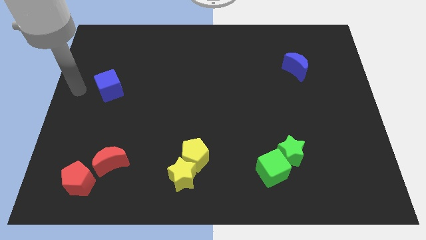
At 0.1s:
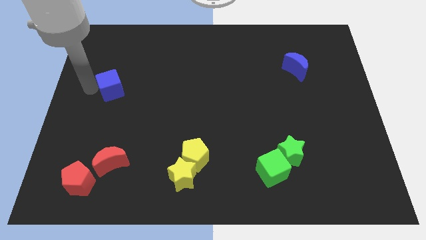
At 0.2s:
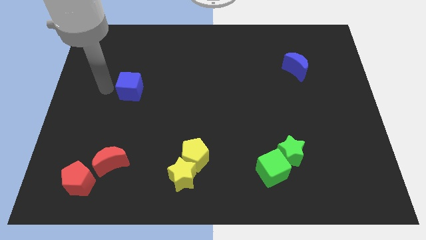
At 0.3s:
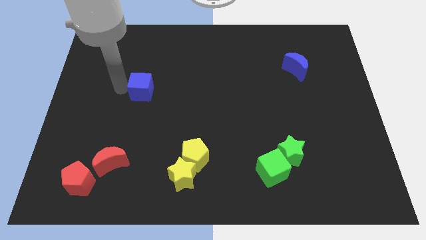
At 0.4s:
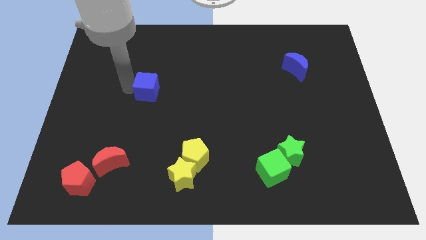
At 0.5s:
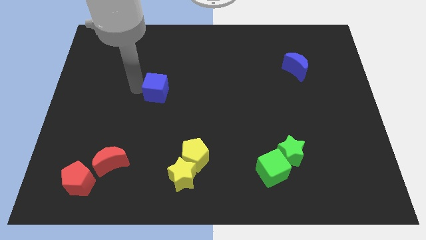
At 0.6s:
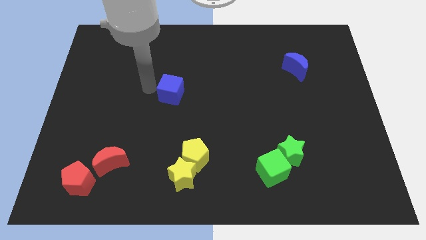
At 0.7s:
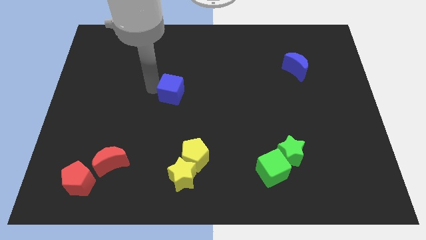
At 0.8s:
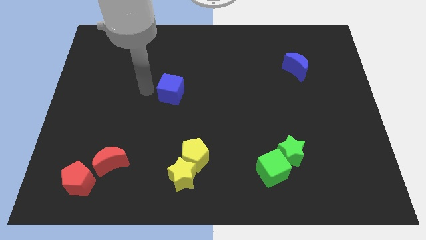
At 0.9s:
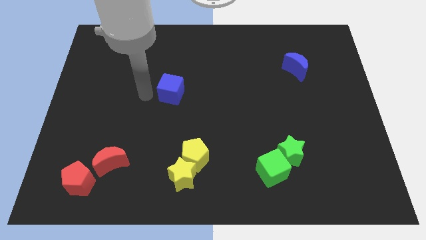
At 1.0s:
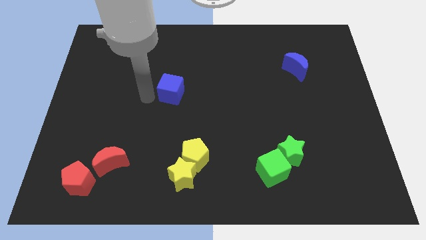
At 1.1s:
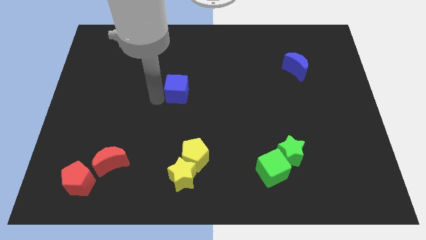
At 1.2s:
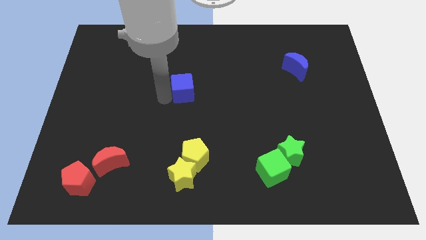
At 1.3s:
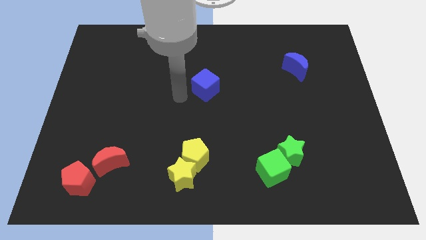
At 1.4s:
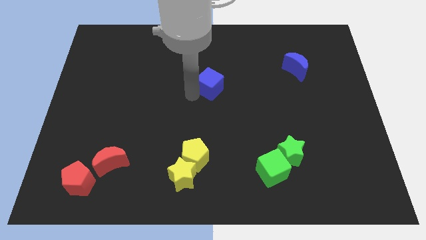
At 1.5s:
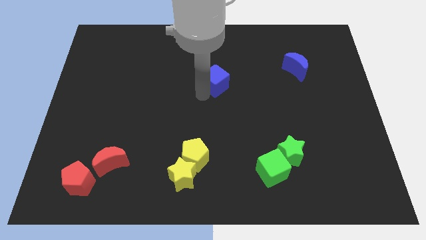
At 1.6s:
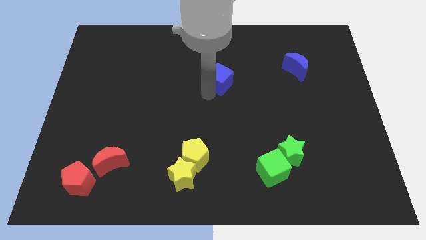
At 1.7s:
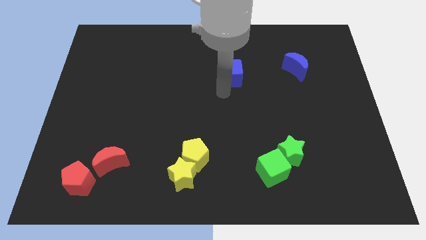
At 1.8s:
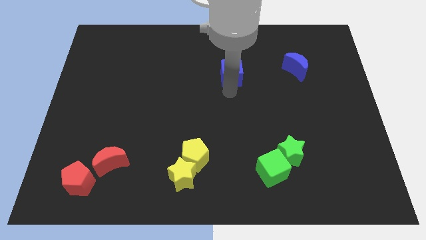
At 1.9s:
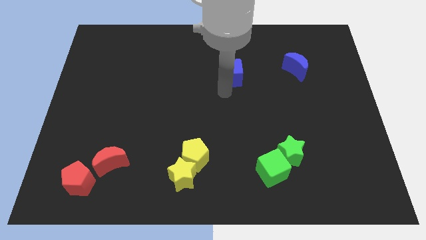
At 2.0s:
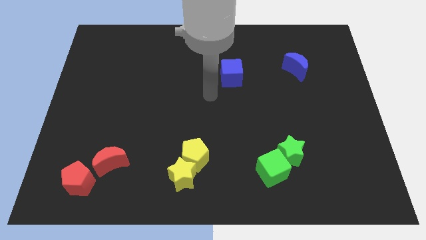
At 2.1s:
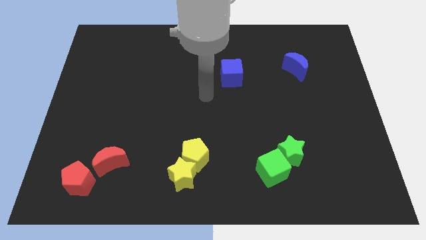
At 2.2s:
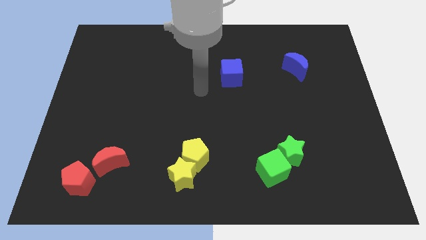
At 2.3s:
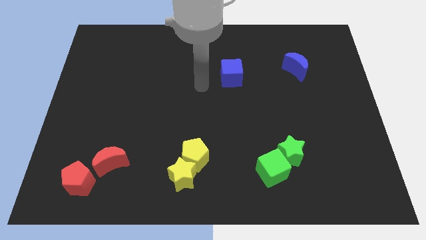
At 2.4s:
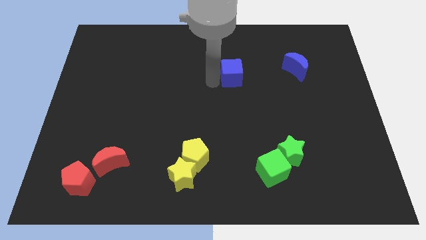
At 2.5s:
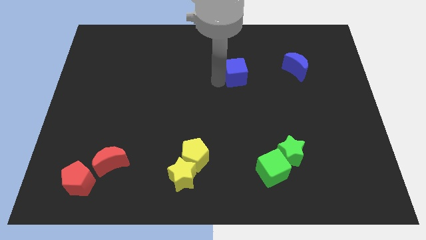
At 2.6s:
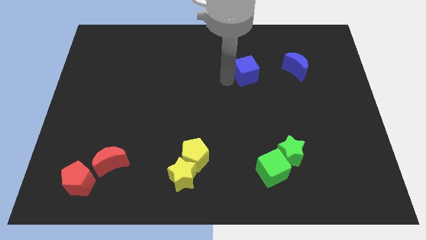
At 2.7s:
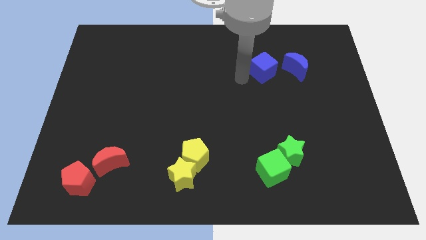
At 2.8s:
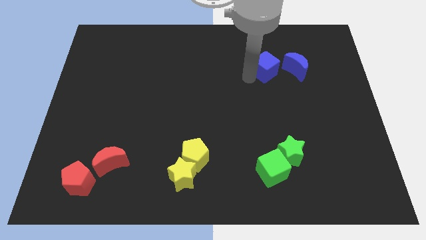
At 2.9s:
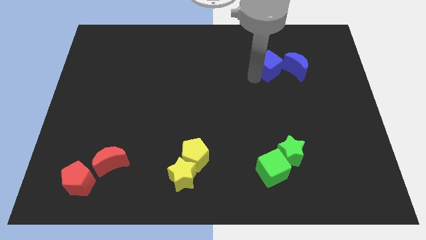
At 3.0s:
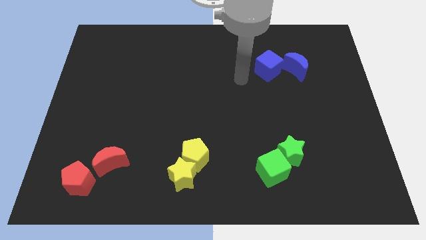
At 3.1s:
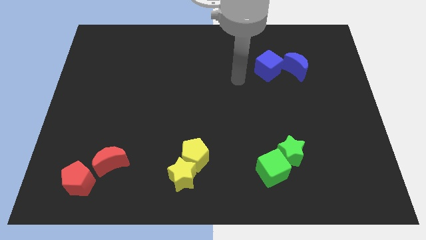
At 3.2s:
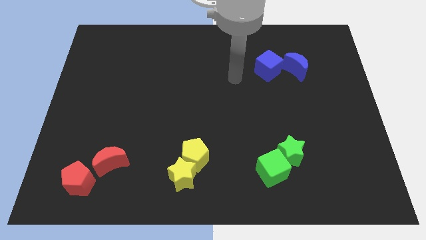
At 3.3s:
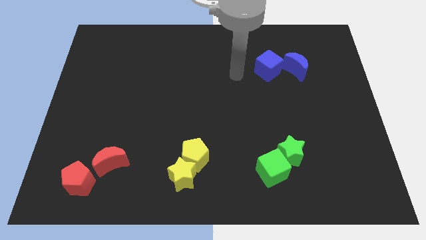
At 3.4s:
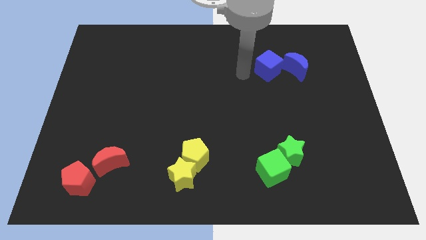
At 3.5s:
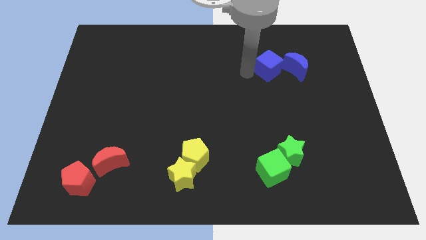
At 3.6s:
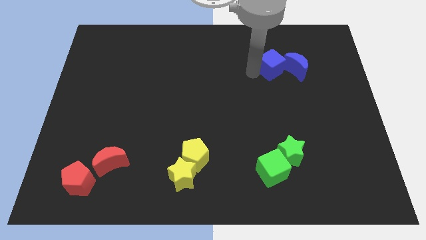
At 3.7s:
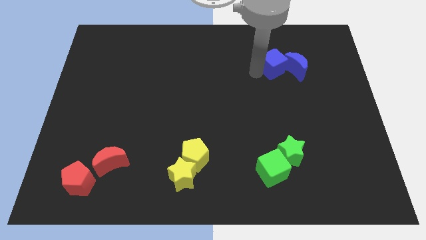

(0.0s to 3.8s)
place the blue cube above the green star

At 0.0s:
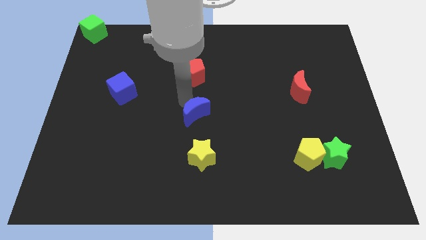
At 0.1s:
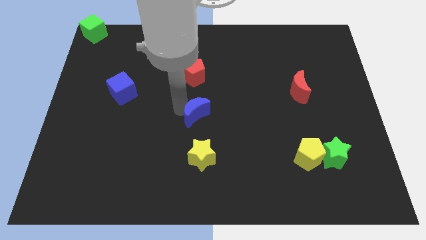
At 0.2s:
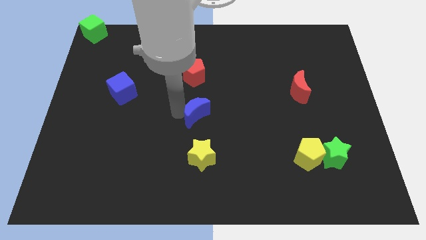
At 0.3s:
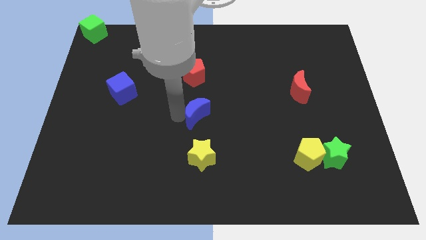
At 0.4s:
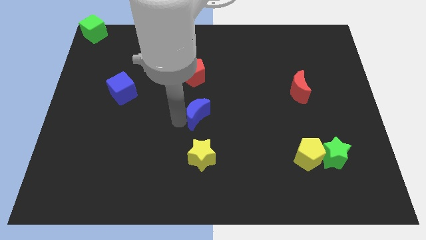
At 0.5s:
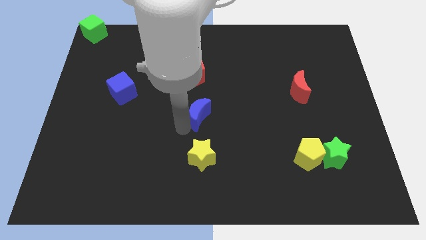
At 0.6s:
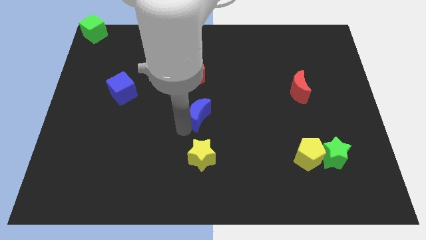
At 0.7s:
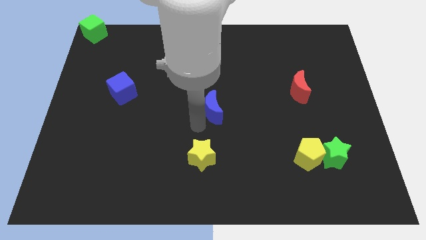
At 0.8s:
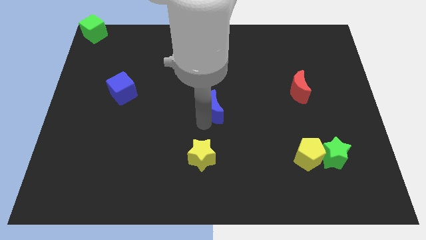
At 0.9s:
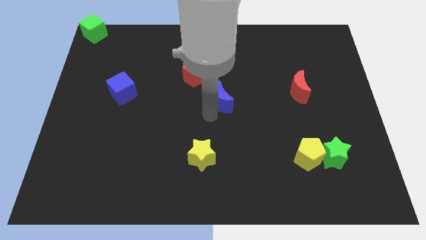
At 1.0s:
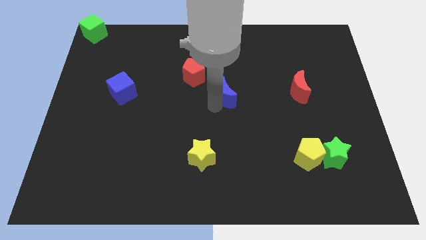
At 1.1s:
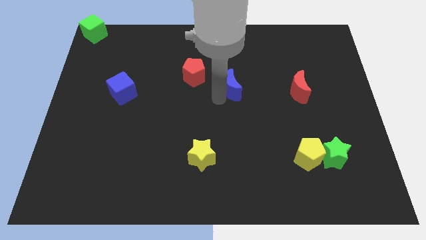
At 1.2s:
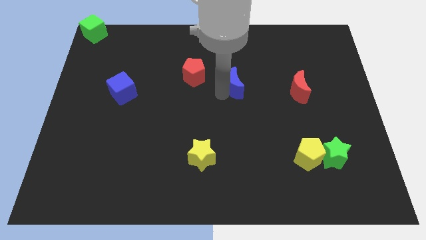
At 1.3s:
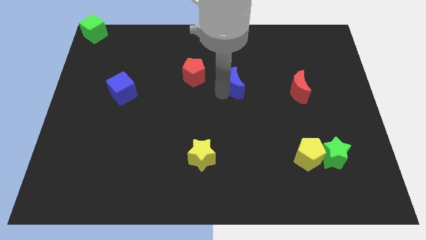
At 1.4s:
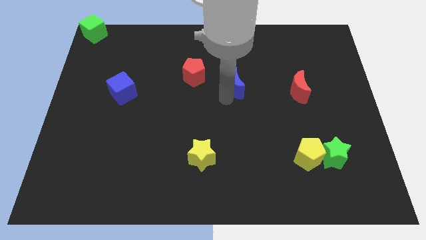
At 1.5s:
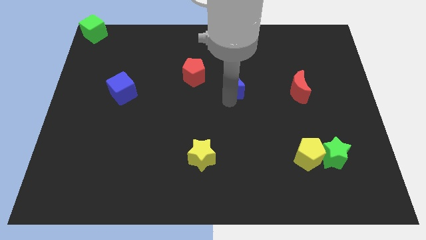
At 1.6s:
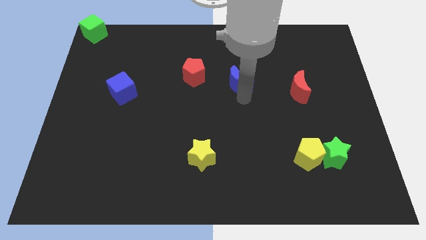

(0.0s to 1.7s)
move blue moon between the red pentagon and red moon

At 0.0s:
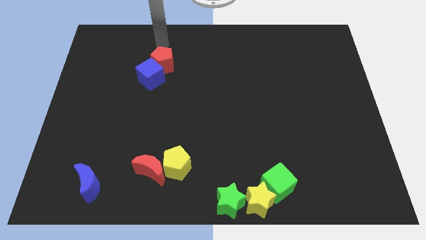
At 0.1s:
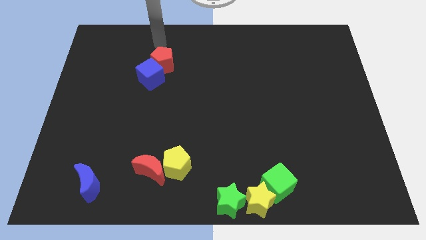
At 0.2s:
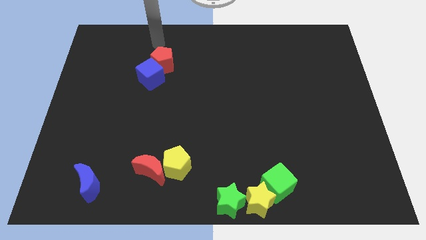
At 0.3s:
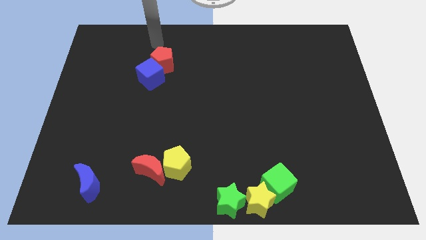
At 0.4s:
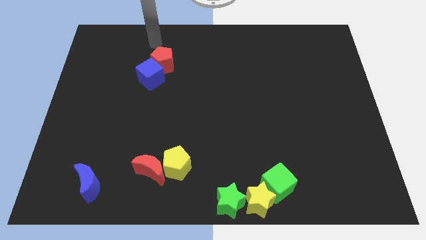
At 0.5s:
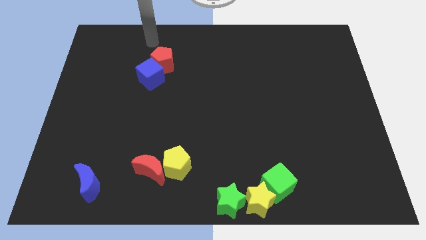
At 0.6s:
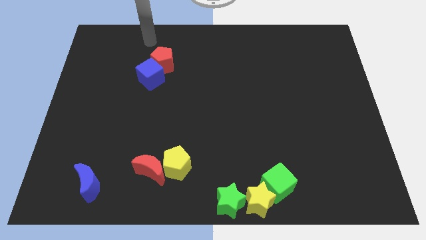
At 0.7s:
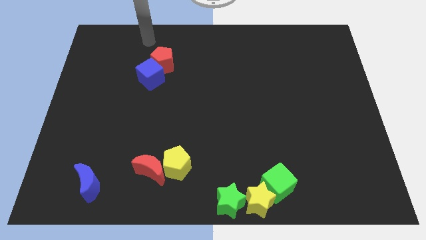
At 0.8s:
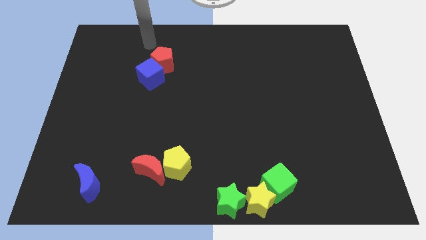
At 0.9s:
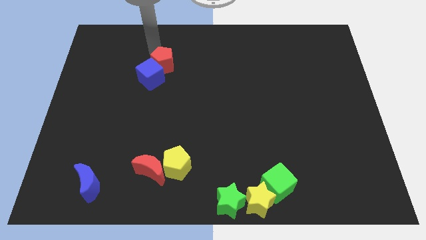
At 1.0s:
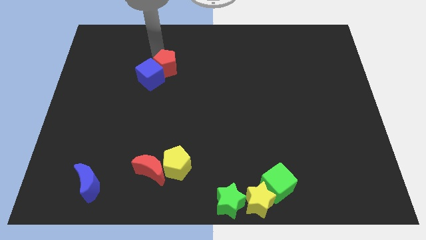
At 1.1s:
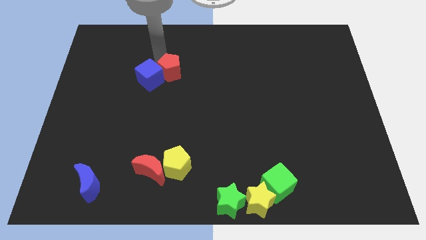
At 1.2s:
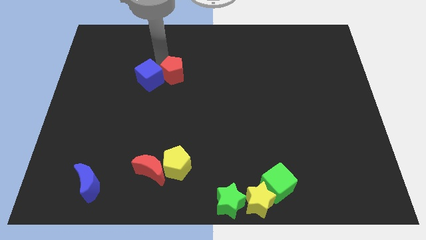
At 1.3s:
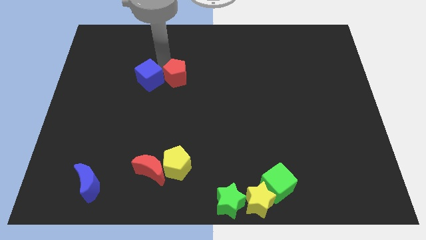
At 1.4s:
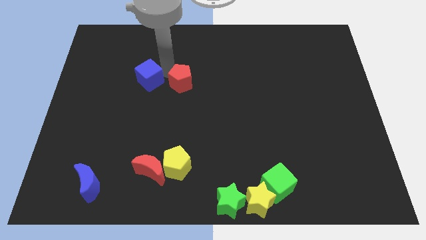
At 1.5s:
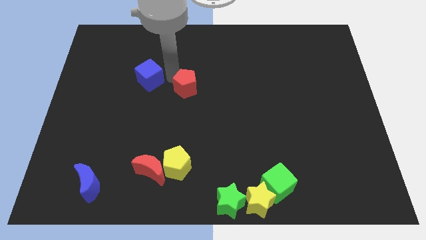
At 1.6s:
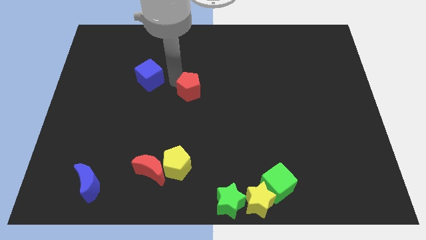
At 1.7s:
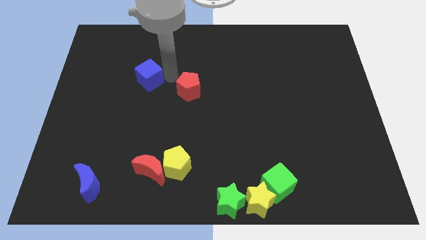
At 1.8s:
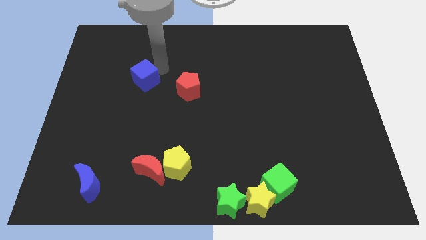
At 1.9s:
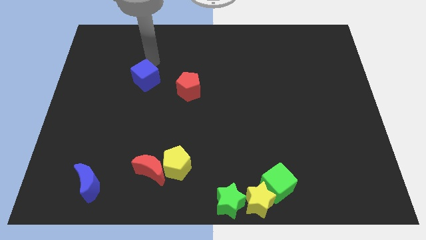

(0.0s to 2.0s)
push the red pentagon towards the center of the board

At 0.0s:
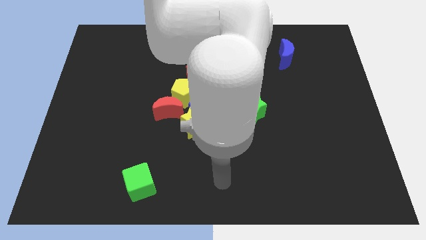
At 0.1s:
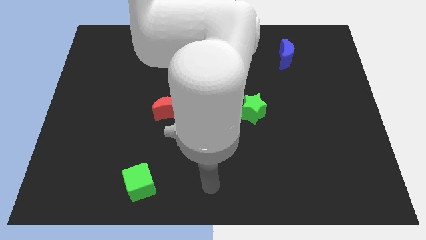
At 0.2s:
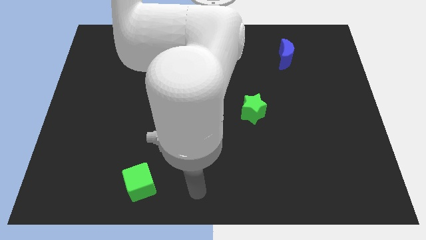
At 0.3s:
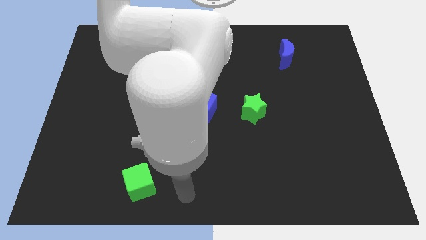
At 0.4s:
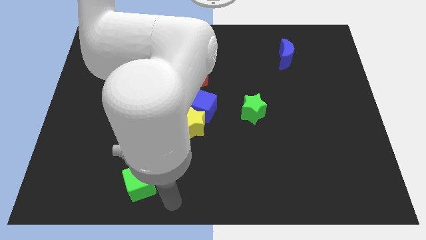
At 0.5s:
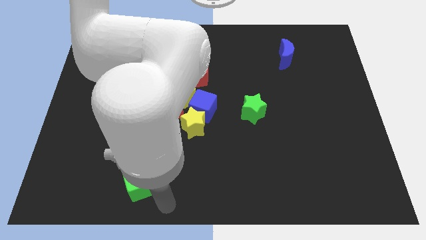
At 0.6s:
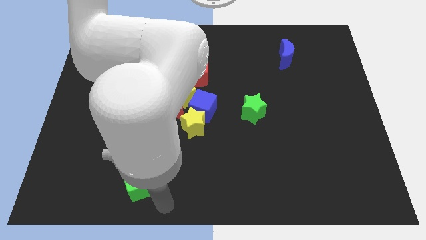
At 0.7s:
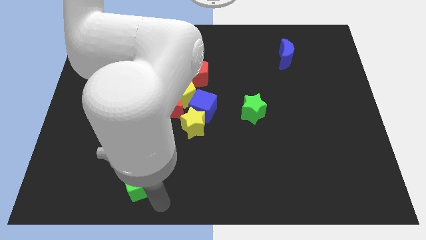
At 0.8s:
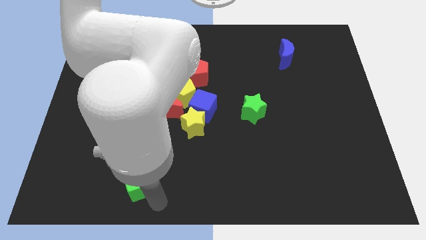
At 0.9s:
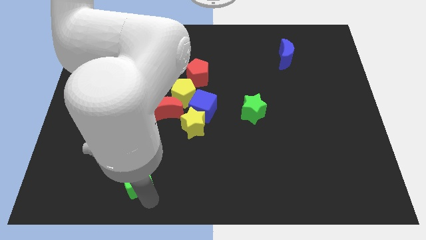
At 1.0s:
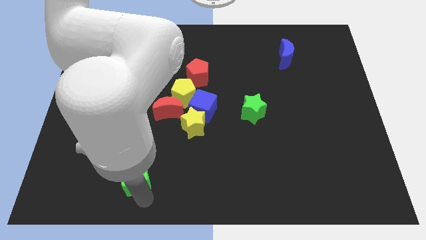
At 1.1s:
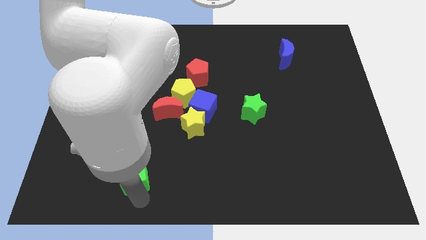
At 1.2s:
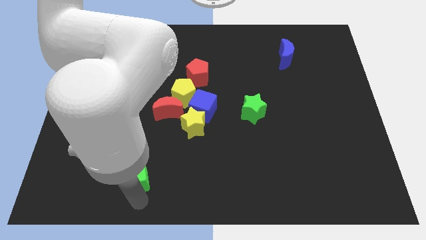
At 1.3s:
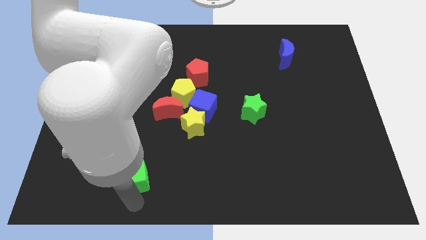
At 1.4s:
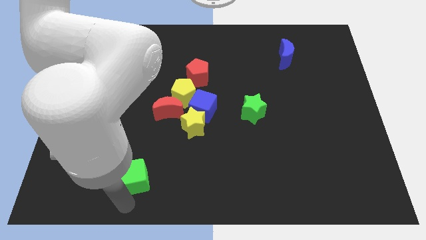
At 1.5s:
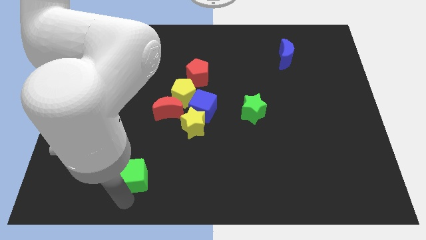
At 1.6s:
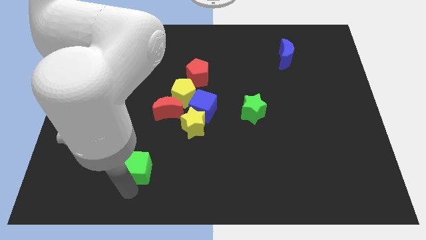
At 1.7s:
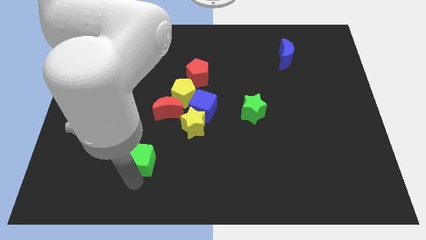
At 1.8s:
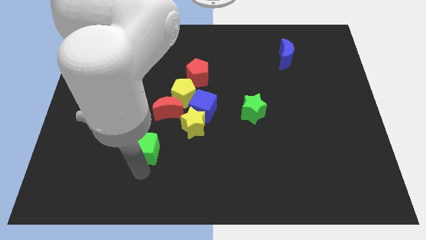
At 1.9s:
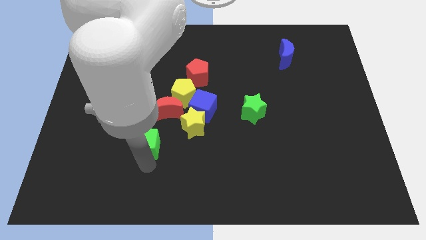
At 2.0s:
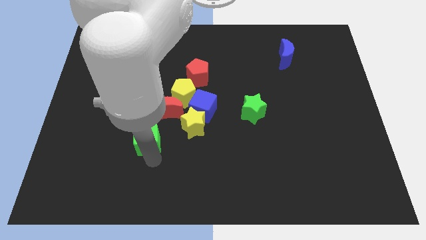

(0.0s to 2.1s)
slightly push the green cube to the center of the board
